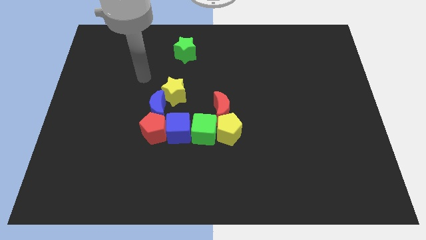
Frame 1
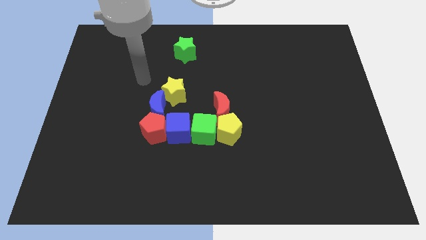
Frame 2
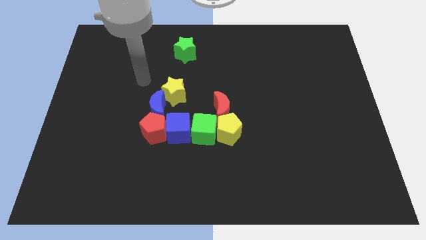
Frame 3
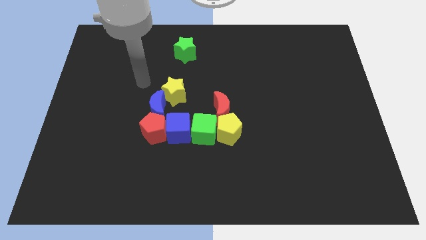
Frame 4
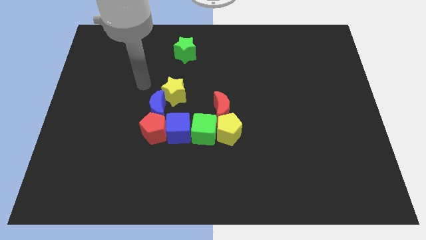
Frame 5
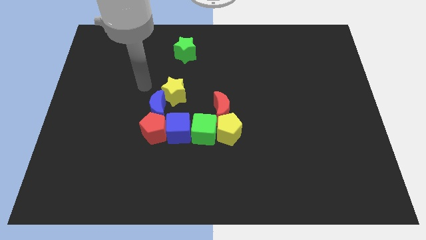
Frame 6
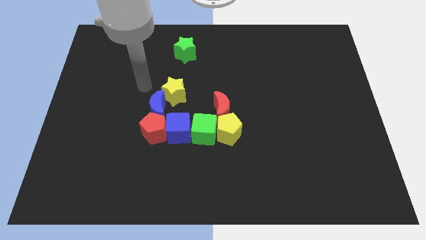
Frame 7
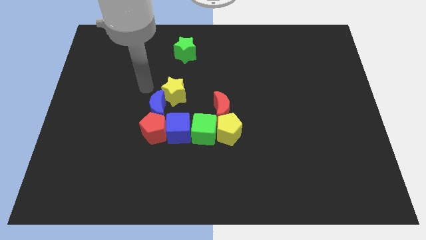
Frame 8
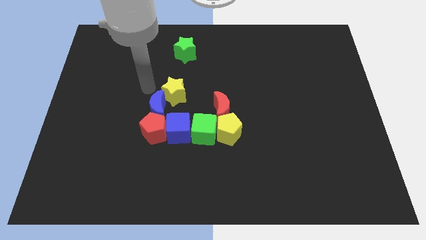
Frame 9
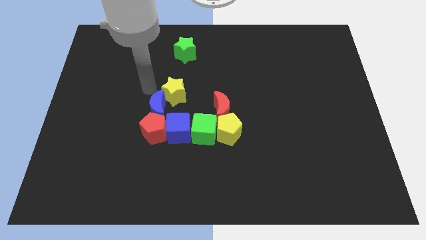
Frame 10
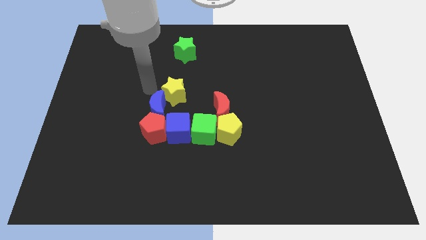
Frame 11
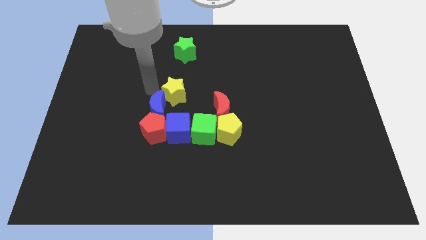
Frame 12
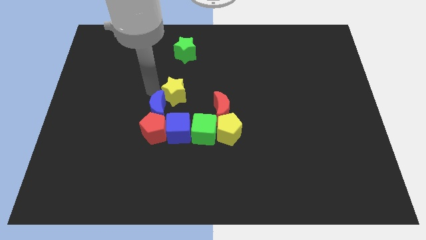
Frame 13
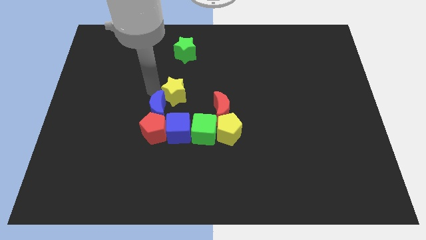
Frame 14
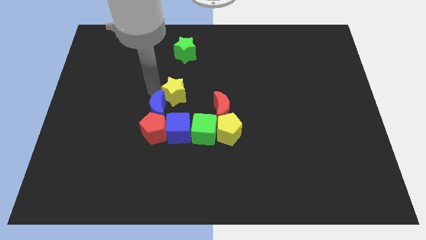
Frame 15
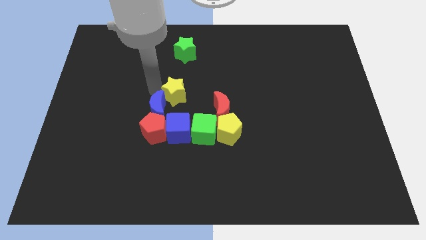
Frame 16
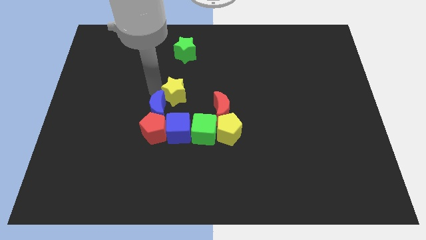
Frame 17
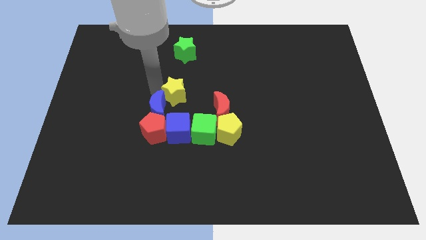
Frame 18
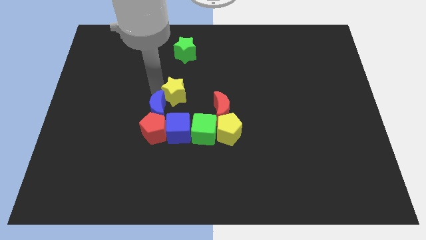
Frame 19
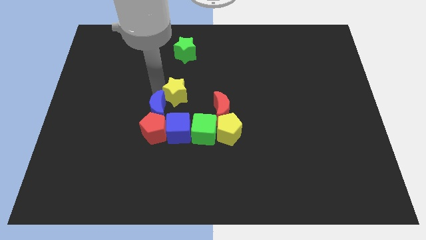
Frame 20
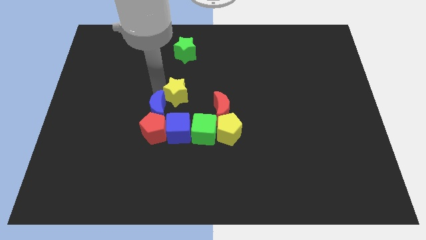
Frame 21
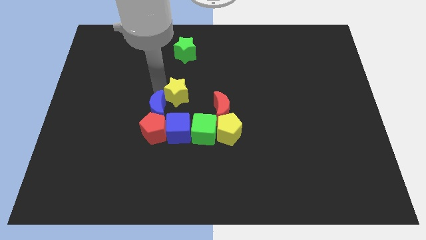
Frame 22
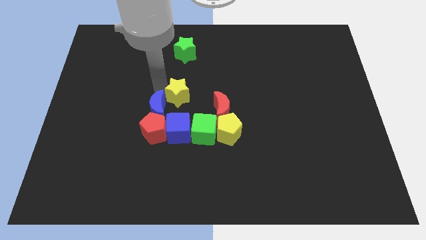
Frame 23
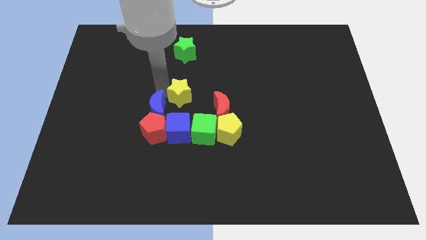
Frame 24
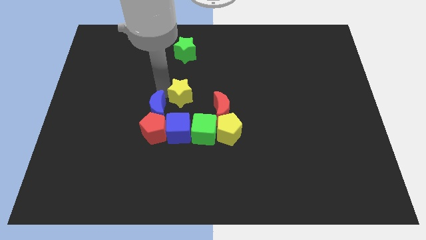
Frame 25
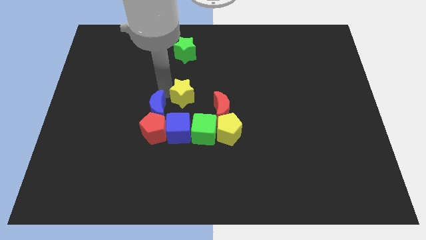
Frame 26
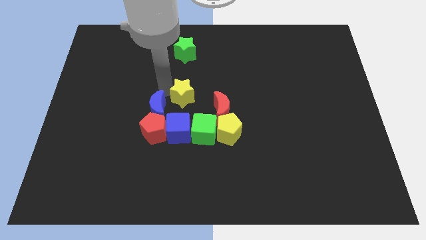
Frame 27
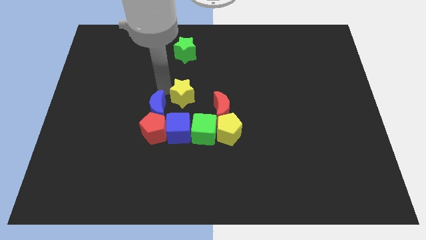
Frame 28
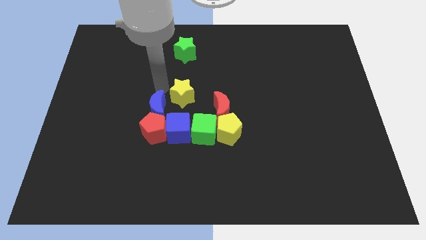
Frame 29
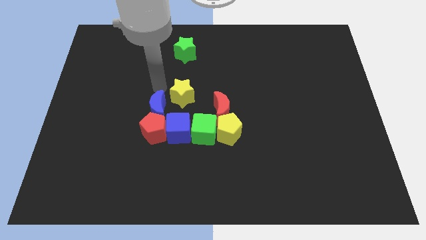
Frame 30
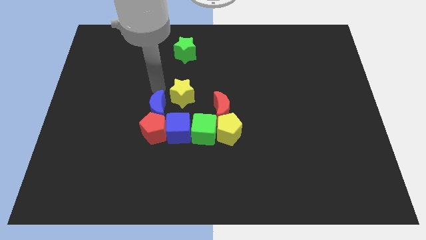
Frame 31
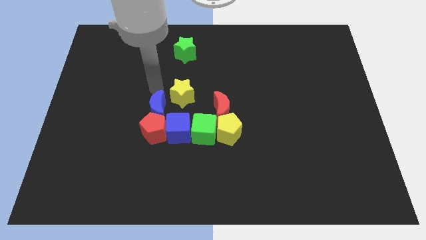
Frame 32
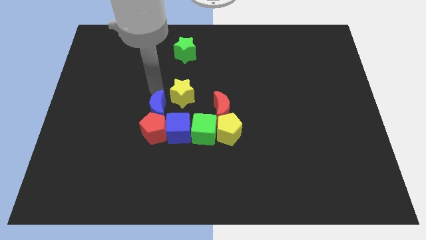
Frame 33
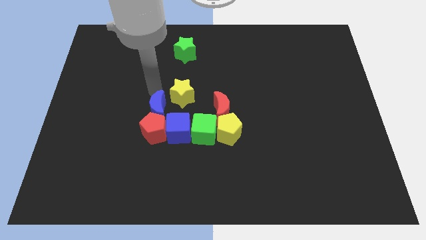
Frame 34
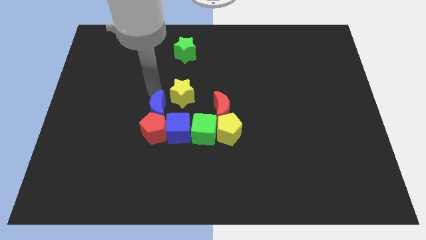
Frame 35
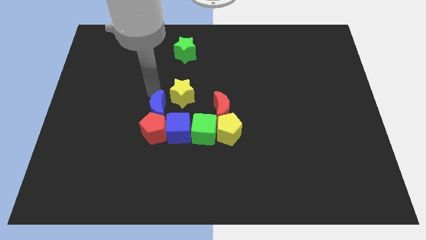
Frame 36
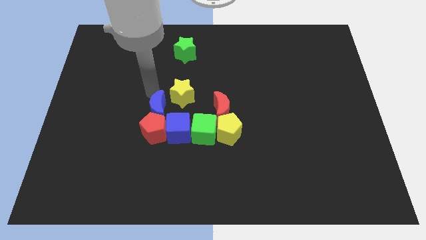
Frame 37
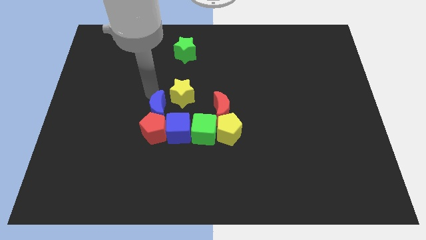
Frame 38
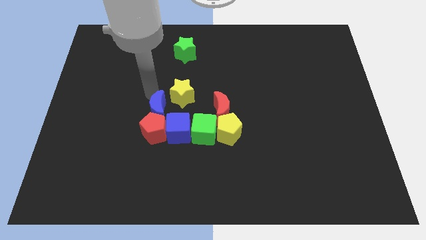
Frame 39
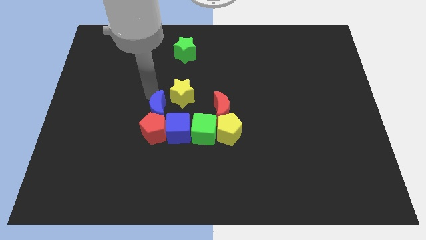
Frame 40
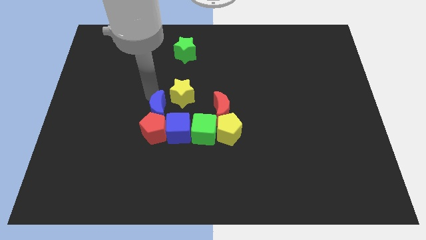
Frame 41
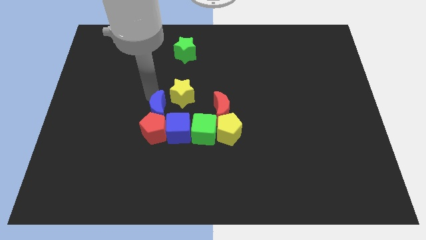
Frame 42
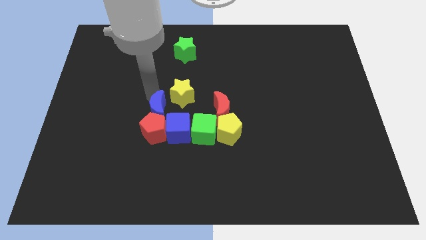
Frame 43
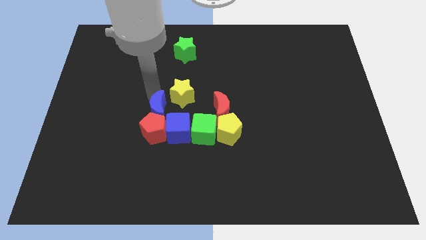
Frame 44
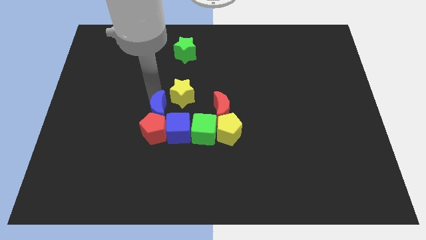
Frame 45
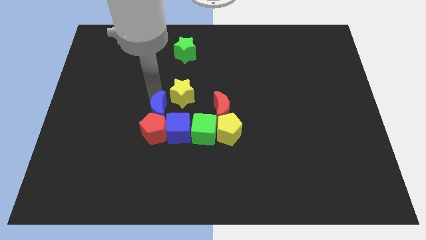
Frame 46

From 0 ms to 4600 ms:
move the yellow star above to the blue cube

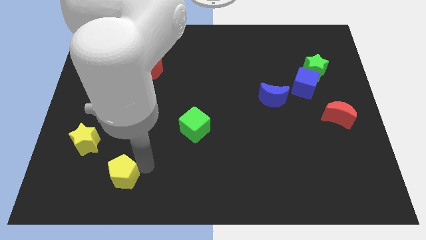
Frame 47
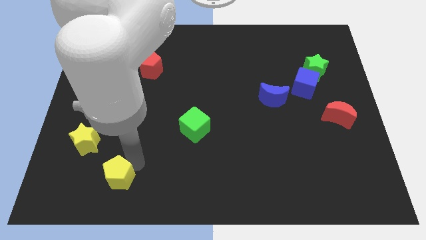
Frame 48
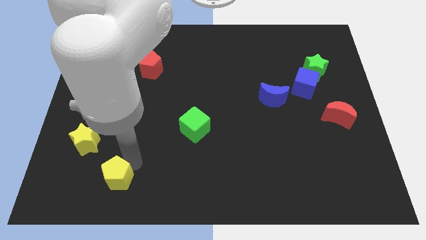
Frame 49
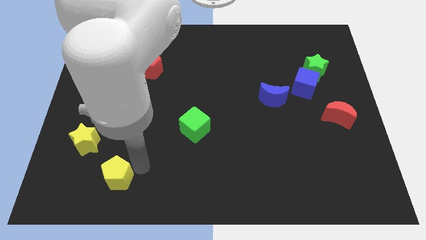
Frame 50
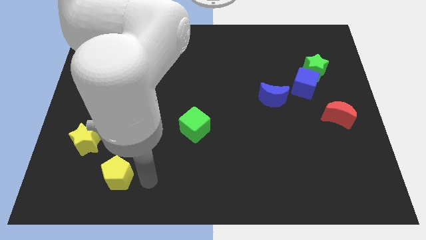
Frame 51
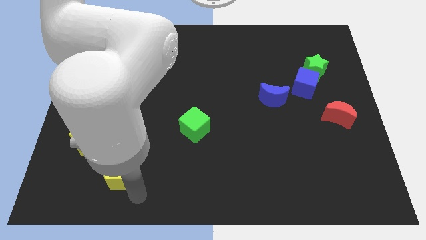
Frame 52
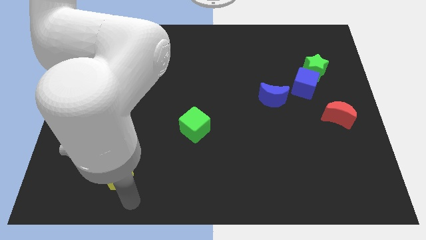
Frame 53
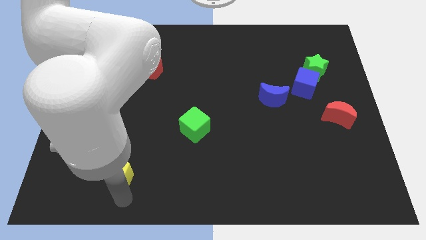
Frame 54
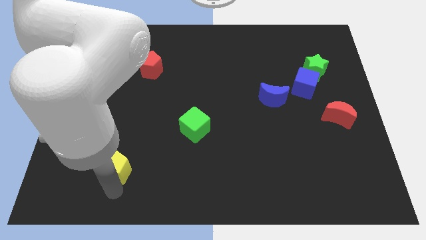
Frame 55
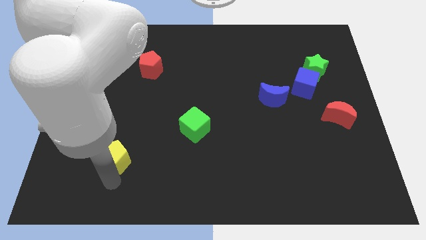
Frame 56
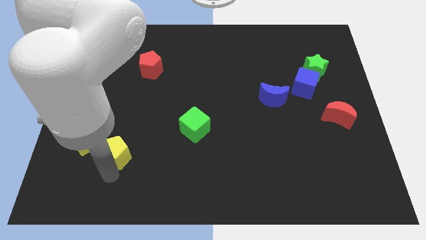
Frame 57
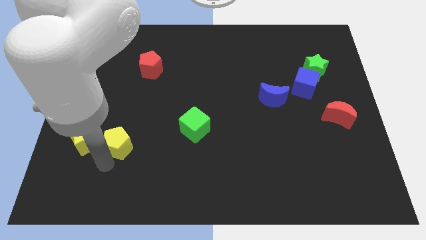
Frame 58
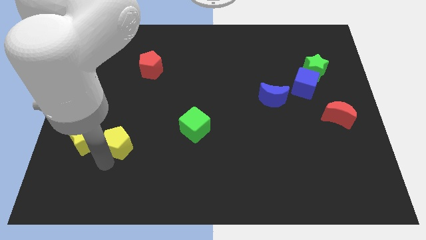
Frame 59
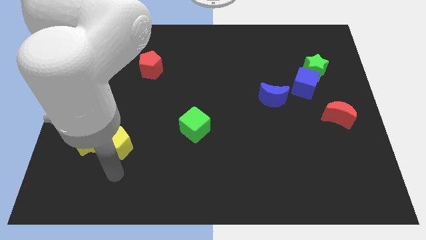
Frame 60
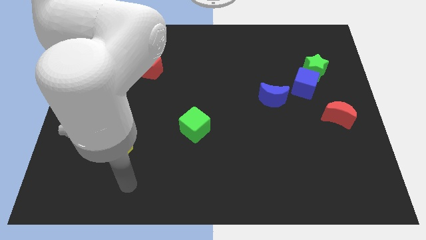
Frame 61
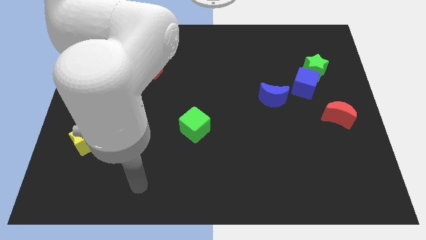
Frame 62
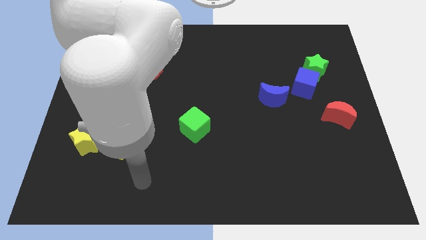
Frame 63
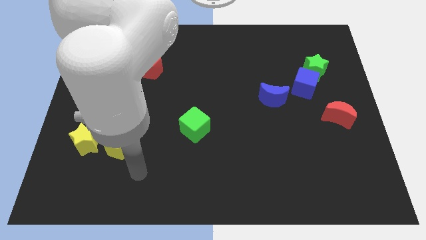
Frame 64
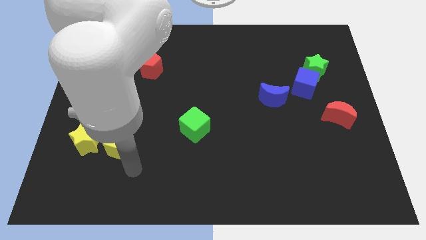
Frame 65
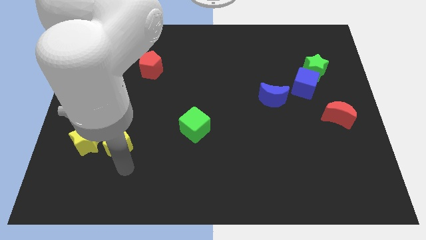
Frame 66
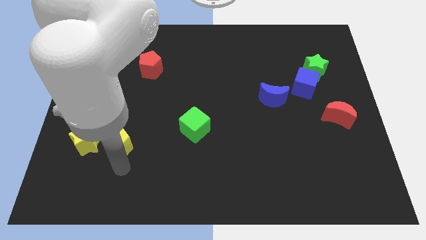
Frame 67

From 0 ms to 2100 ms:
place yellow pentagon to the right of yellow star

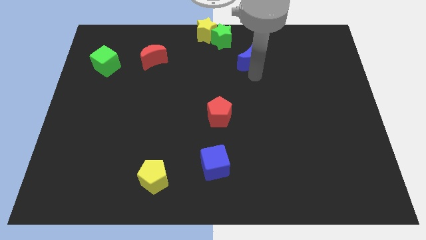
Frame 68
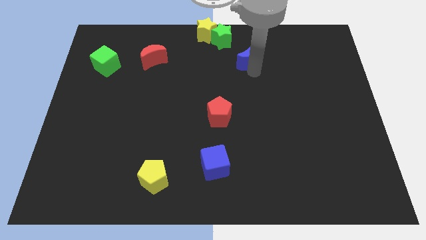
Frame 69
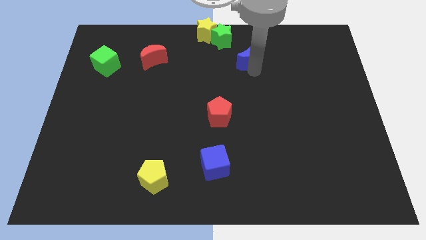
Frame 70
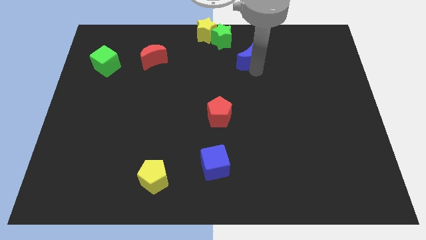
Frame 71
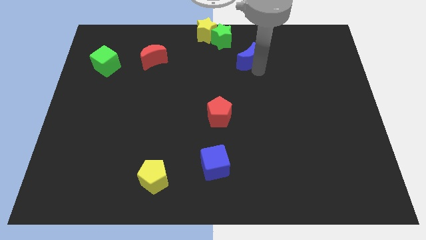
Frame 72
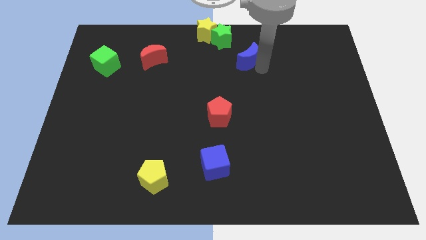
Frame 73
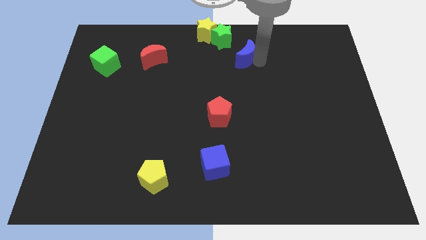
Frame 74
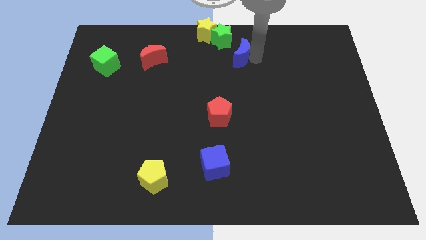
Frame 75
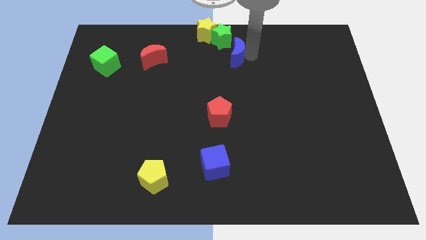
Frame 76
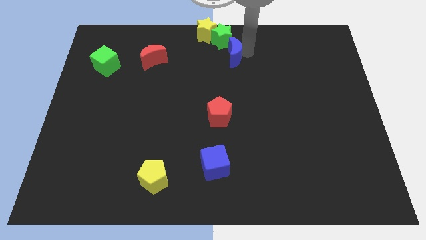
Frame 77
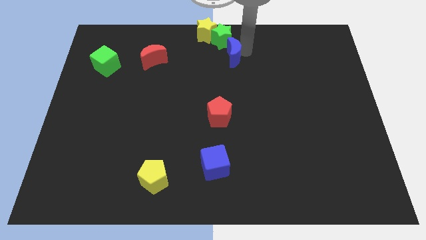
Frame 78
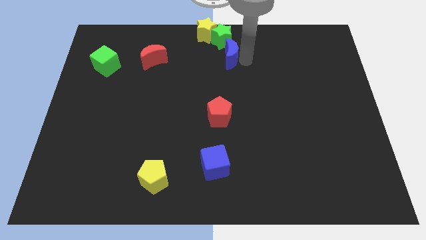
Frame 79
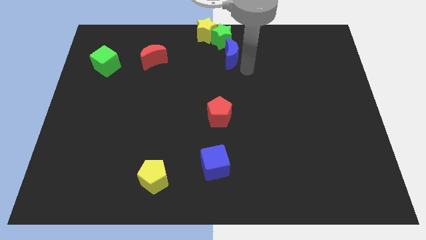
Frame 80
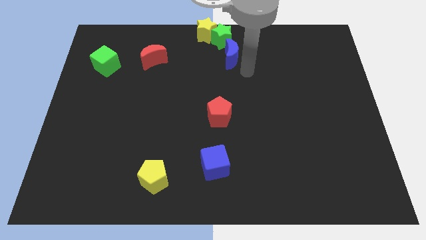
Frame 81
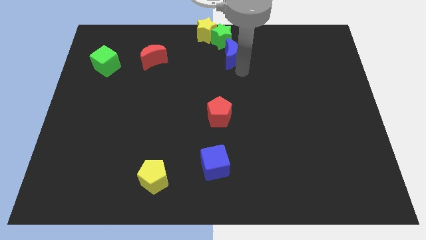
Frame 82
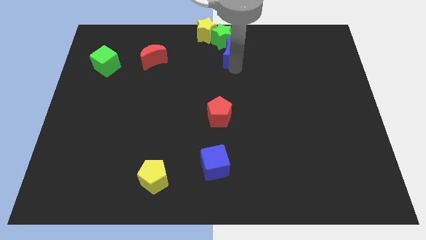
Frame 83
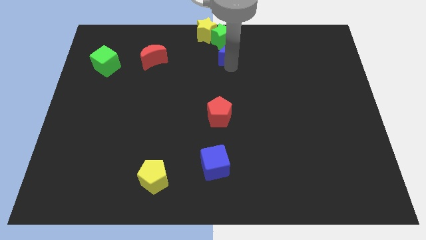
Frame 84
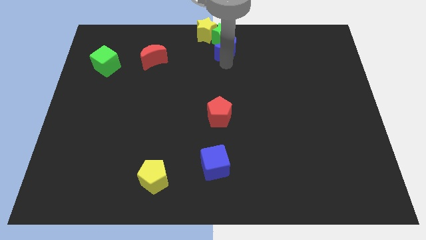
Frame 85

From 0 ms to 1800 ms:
move the blue crescent to top center of the board

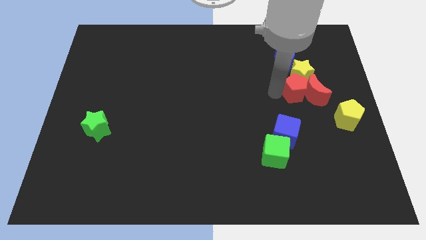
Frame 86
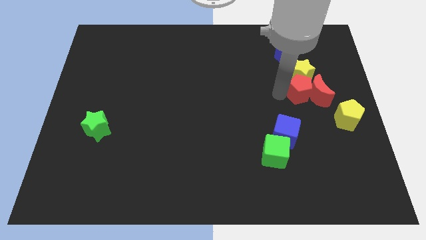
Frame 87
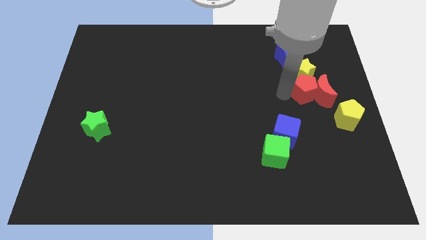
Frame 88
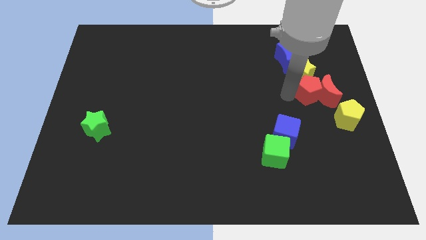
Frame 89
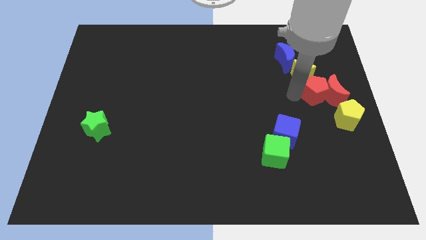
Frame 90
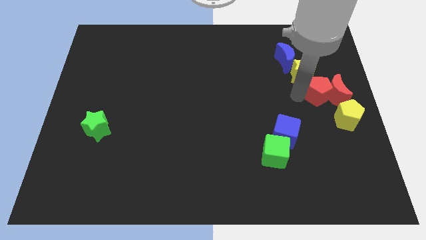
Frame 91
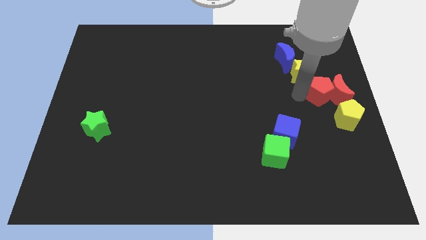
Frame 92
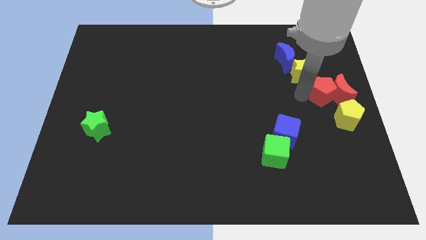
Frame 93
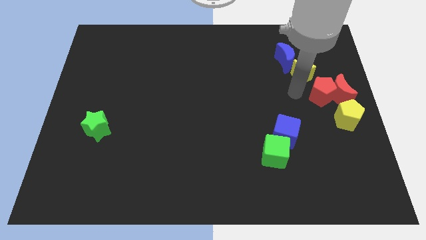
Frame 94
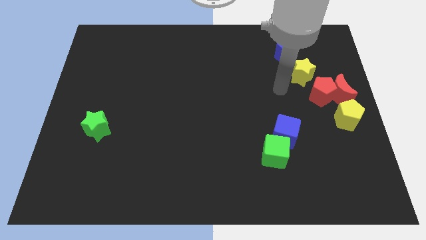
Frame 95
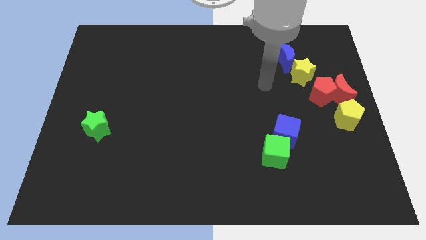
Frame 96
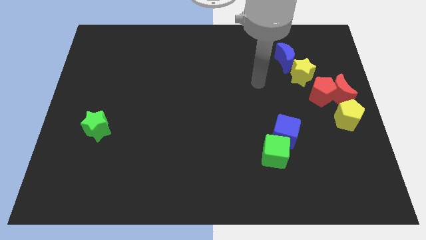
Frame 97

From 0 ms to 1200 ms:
push the red blocks towards the yellow pentagon
